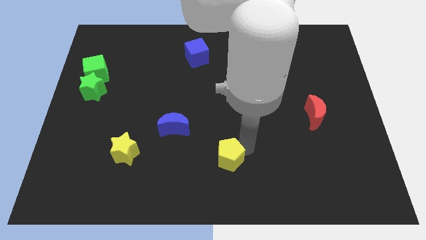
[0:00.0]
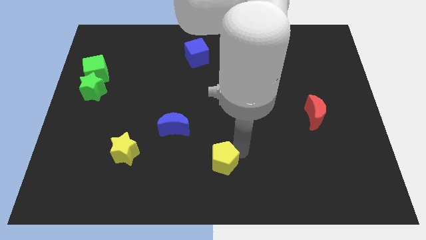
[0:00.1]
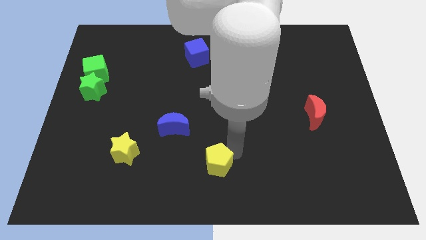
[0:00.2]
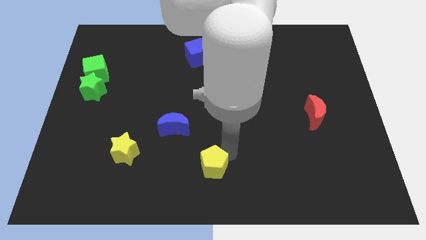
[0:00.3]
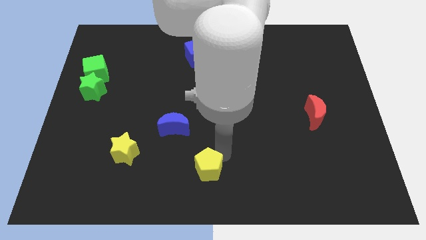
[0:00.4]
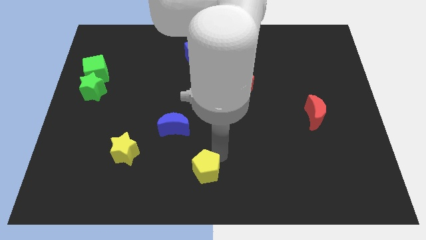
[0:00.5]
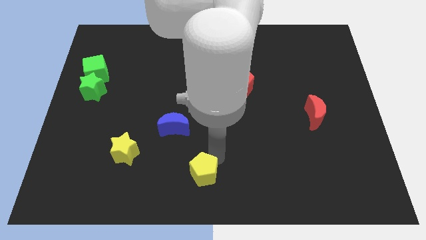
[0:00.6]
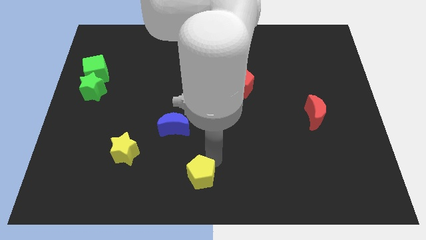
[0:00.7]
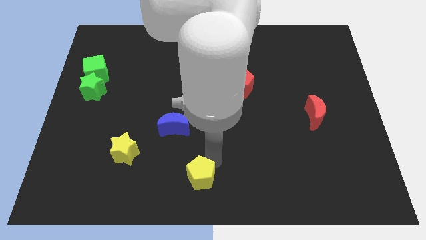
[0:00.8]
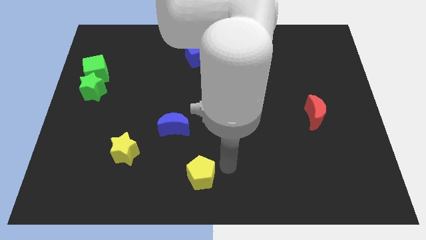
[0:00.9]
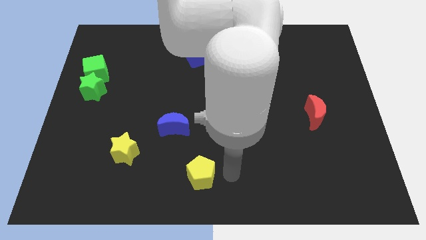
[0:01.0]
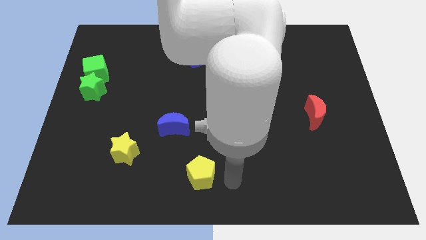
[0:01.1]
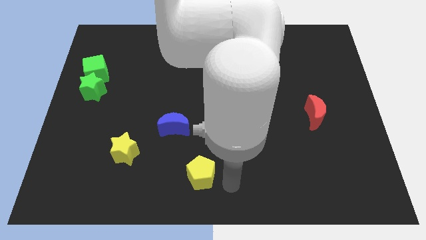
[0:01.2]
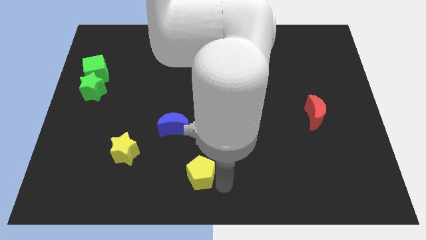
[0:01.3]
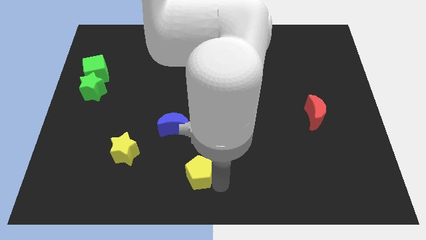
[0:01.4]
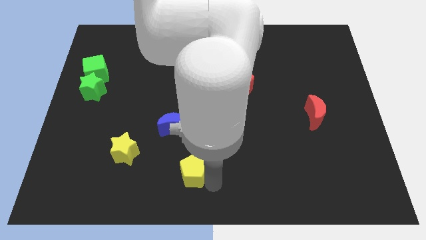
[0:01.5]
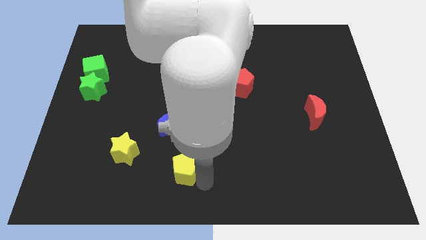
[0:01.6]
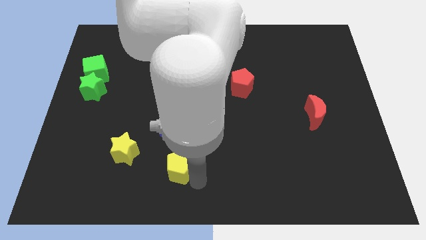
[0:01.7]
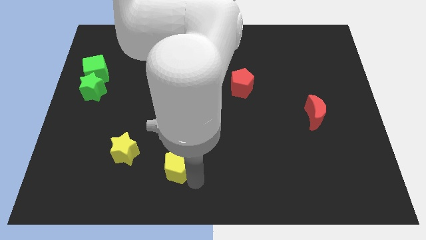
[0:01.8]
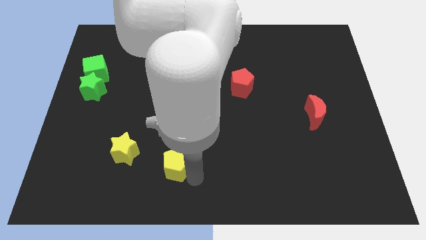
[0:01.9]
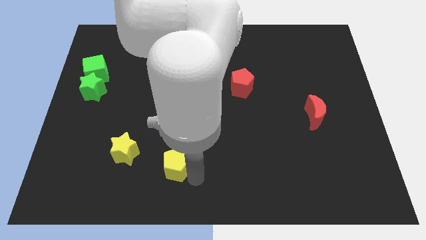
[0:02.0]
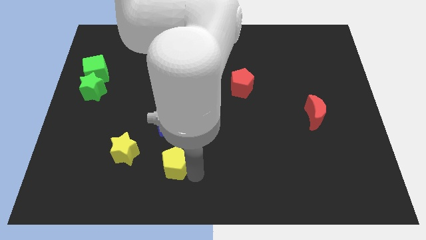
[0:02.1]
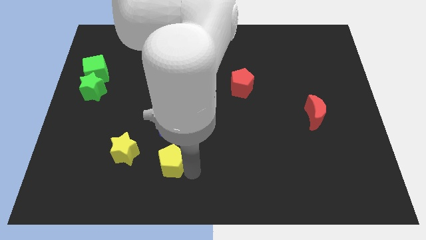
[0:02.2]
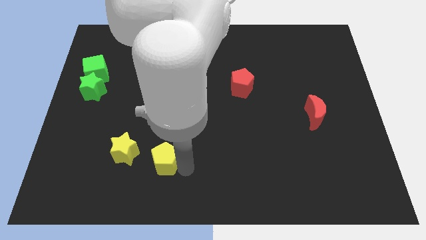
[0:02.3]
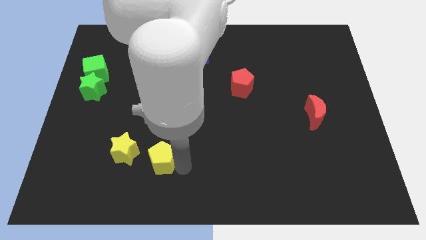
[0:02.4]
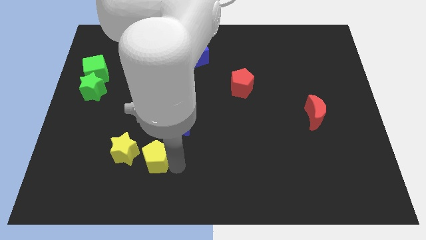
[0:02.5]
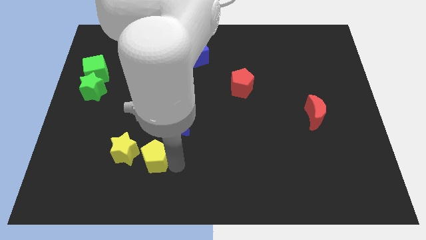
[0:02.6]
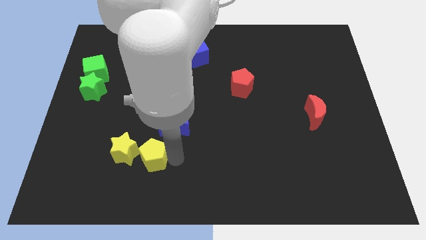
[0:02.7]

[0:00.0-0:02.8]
move the yellow pentagon to the right of the yellow star

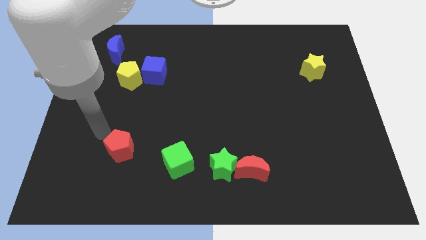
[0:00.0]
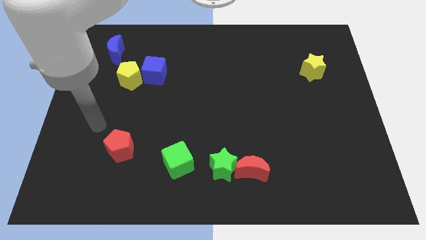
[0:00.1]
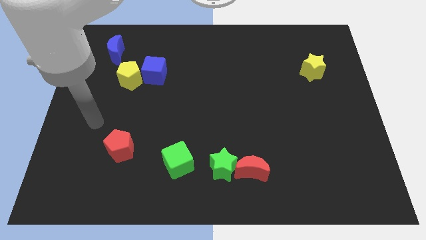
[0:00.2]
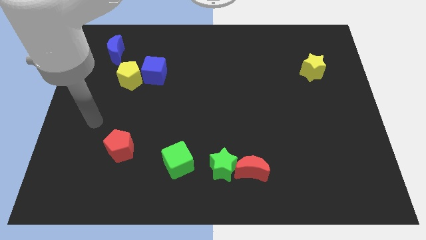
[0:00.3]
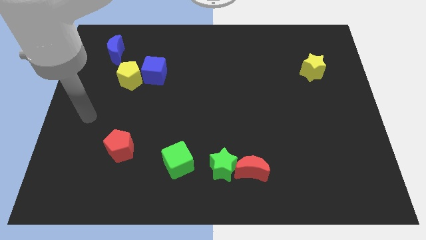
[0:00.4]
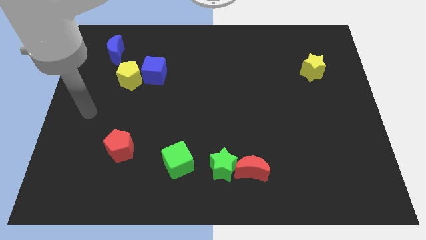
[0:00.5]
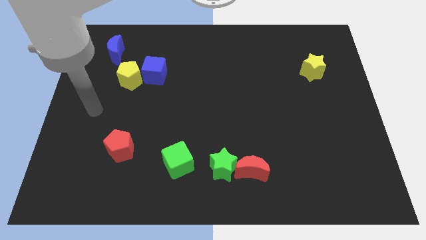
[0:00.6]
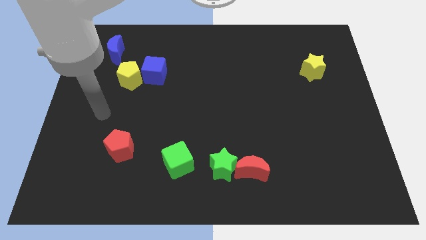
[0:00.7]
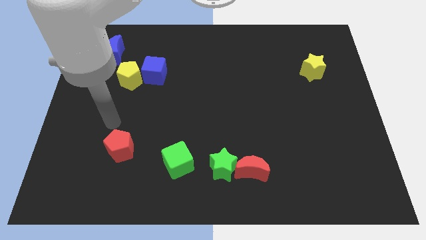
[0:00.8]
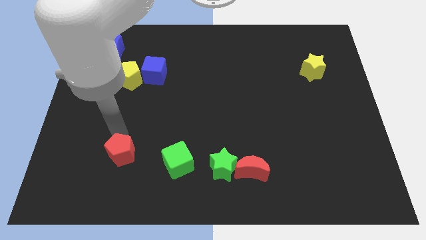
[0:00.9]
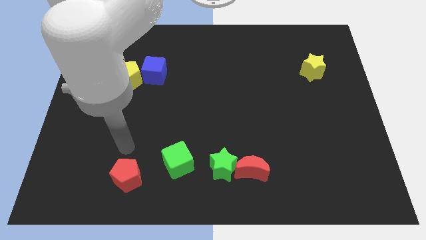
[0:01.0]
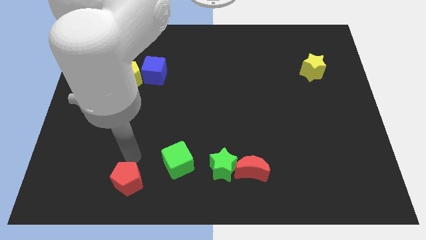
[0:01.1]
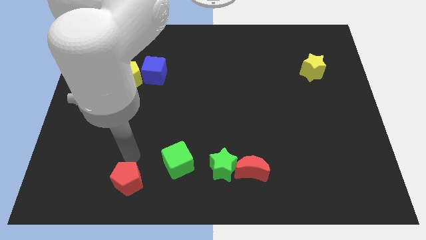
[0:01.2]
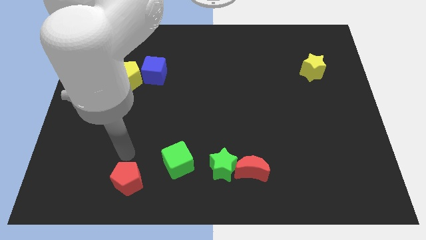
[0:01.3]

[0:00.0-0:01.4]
move the red pentagon parallel bottom left to the green cube

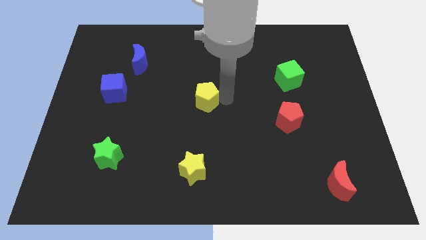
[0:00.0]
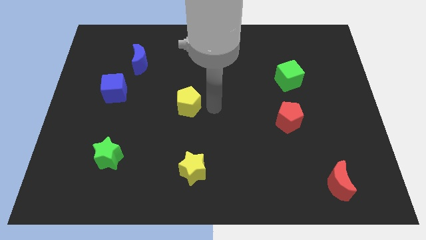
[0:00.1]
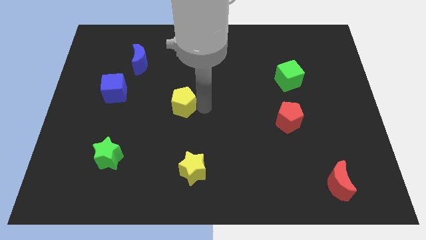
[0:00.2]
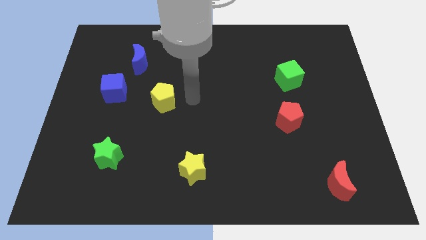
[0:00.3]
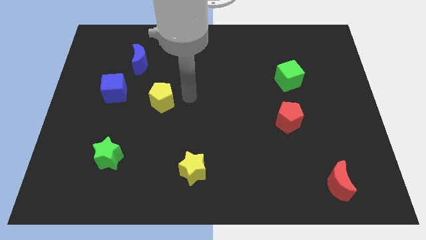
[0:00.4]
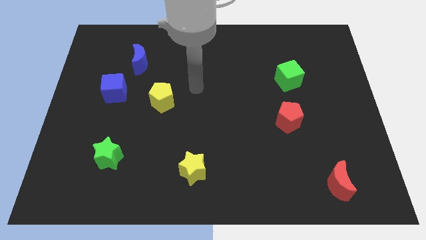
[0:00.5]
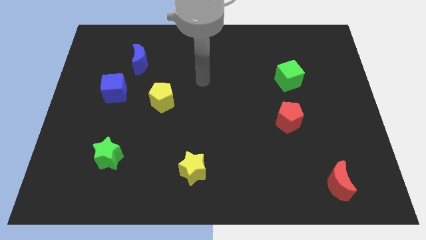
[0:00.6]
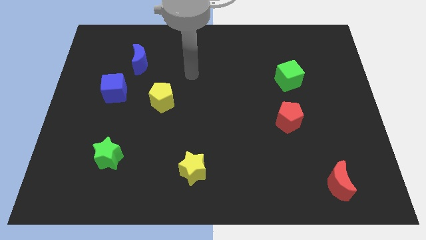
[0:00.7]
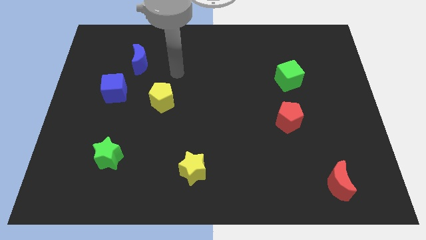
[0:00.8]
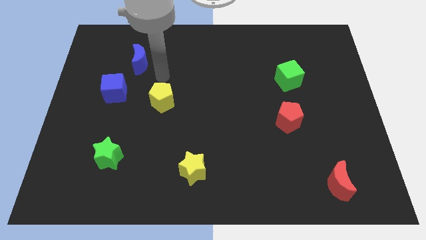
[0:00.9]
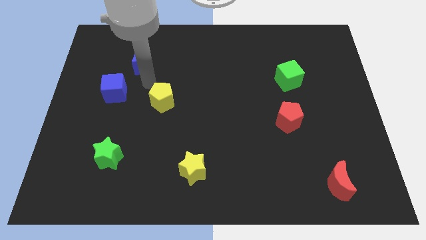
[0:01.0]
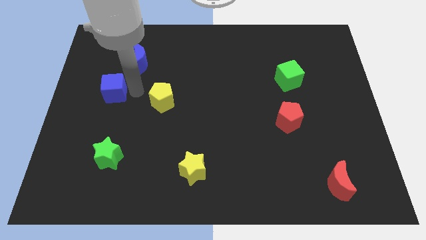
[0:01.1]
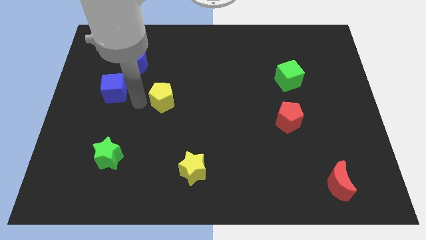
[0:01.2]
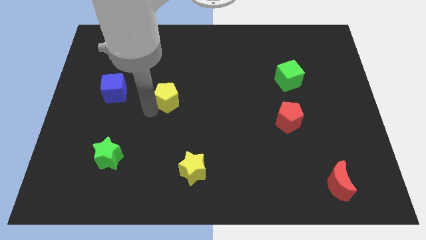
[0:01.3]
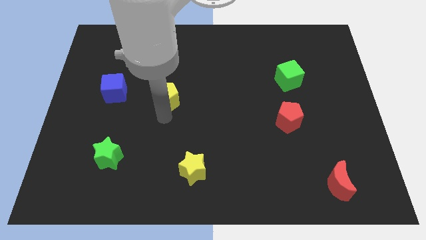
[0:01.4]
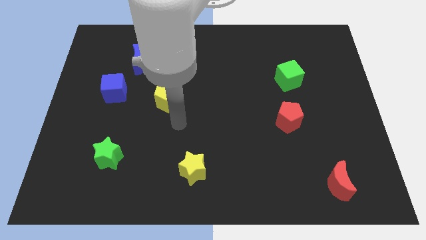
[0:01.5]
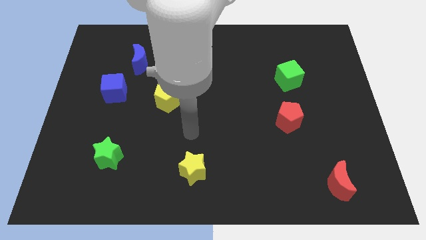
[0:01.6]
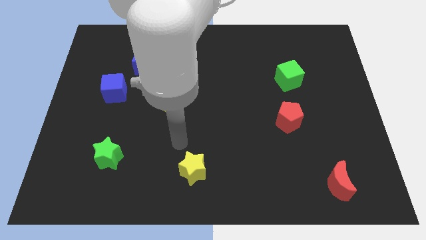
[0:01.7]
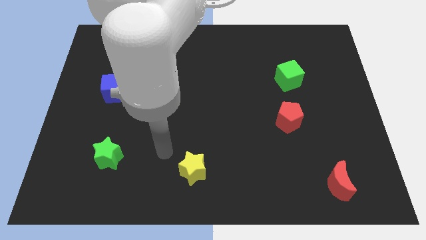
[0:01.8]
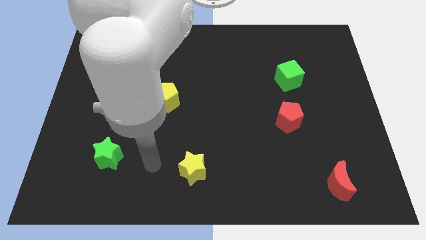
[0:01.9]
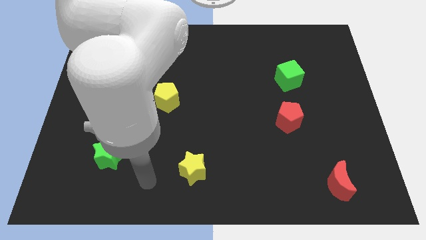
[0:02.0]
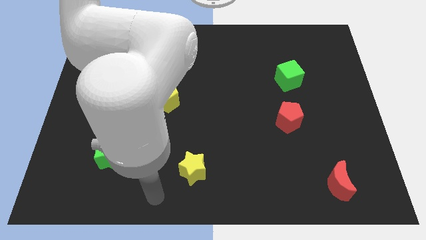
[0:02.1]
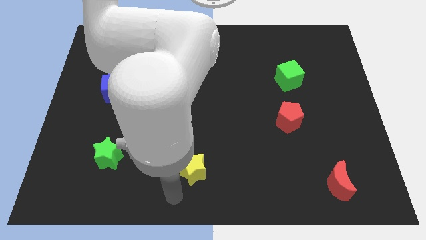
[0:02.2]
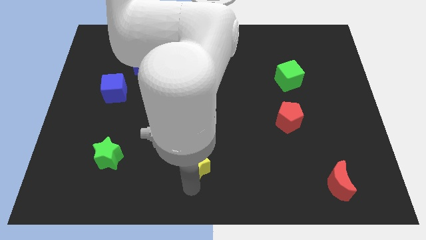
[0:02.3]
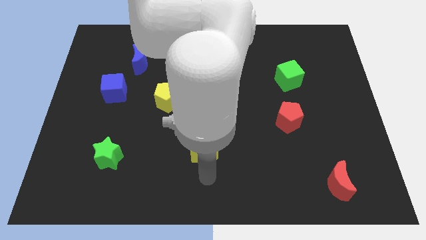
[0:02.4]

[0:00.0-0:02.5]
put the yellow pentagon diagonal to the green star

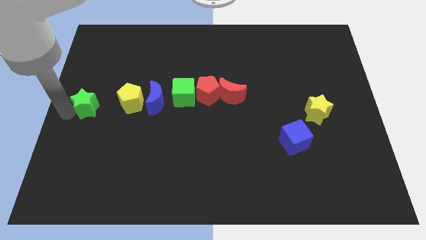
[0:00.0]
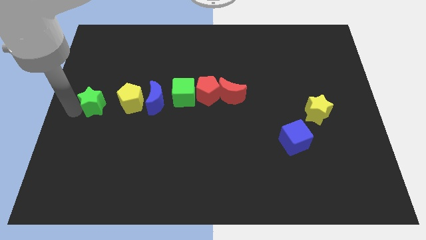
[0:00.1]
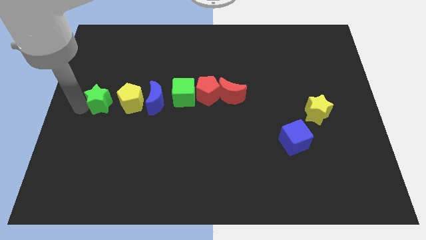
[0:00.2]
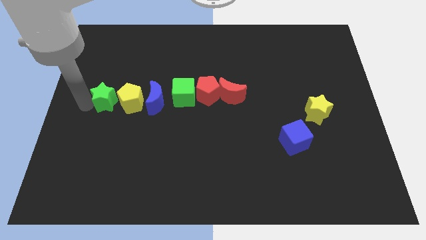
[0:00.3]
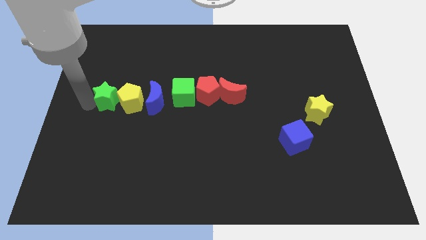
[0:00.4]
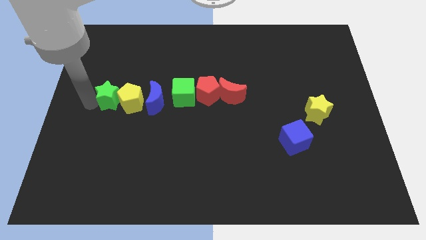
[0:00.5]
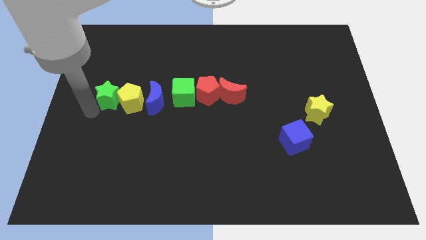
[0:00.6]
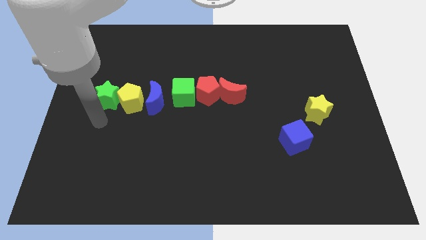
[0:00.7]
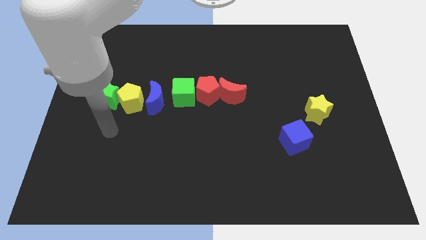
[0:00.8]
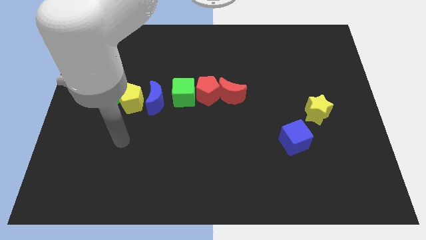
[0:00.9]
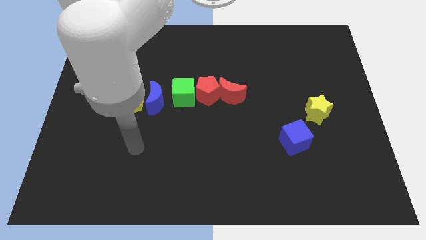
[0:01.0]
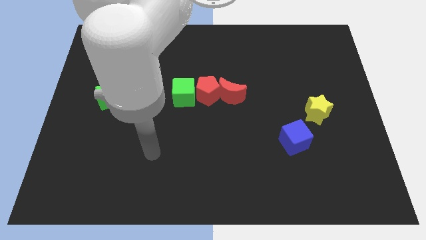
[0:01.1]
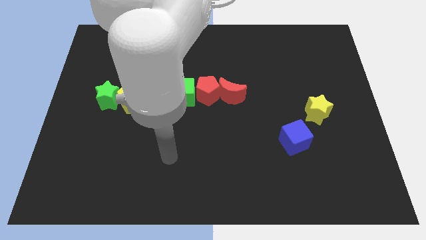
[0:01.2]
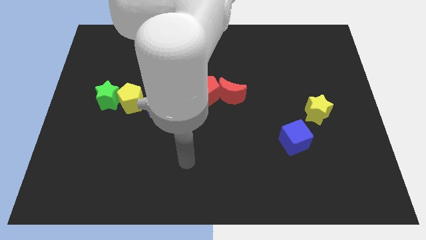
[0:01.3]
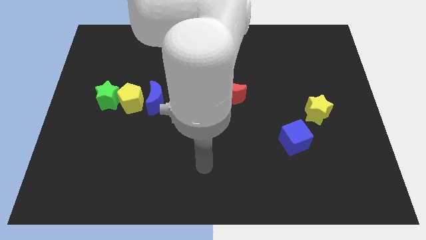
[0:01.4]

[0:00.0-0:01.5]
place the green star into the yellow pentagon

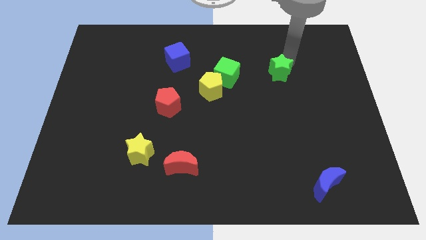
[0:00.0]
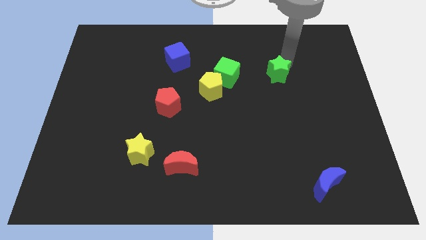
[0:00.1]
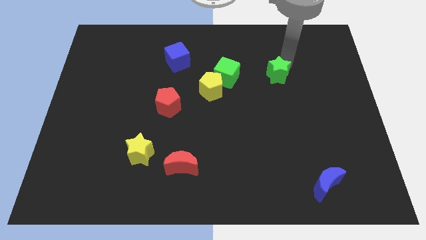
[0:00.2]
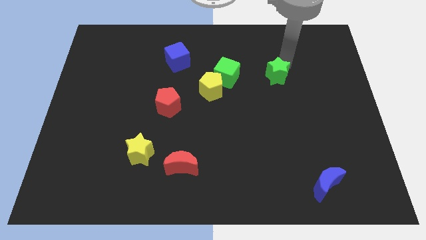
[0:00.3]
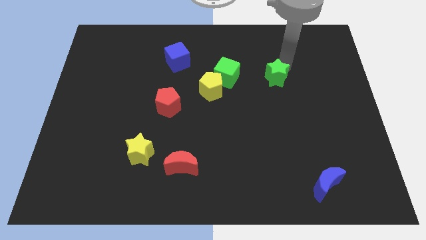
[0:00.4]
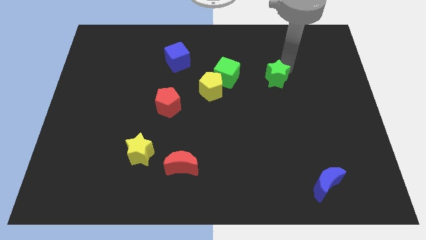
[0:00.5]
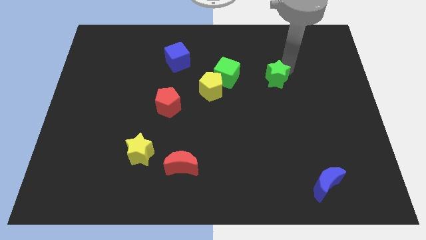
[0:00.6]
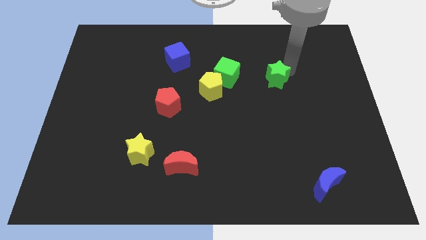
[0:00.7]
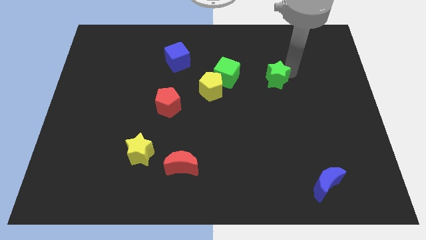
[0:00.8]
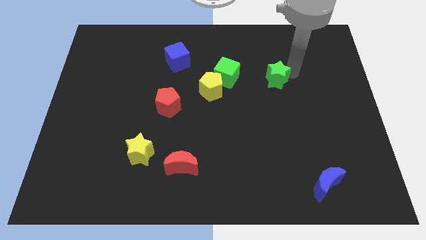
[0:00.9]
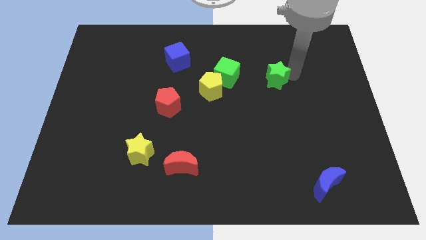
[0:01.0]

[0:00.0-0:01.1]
put the green star to the right of the green cube
